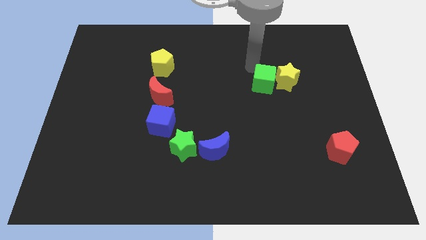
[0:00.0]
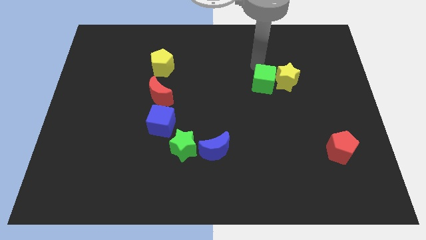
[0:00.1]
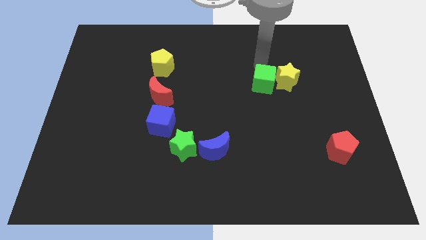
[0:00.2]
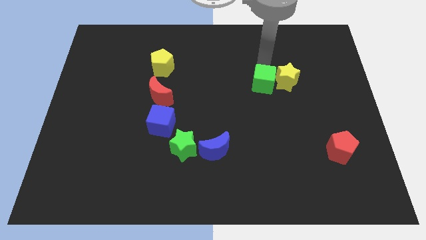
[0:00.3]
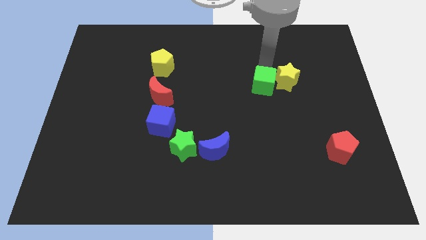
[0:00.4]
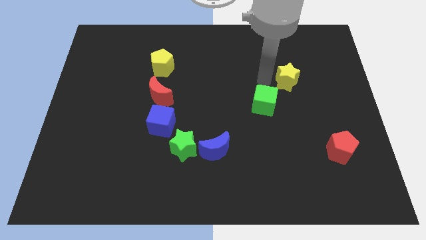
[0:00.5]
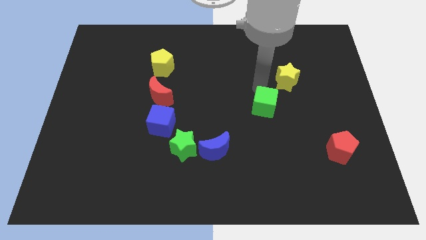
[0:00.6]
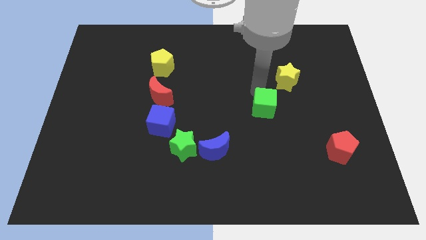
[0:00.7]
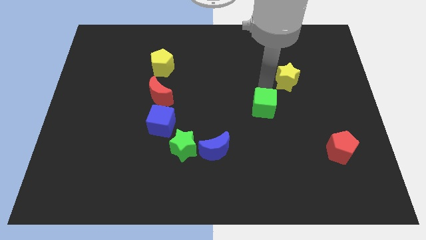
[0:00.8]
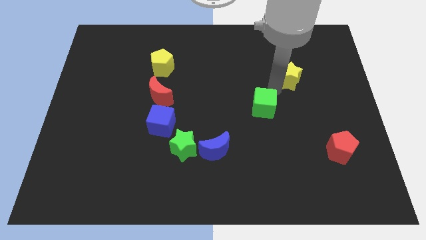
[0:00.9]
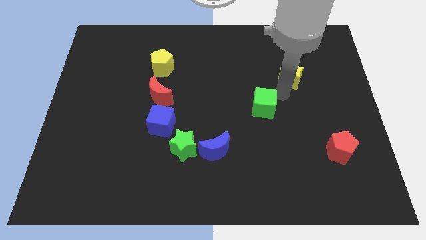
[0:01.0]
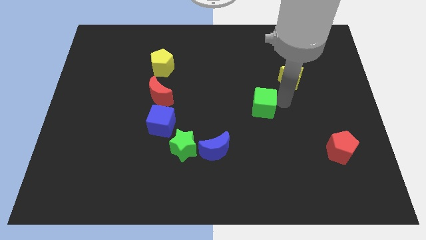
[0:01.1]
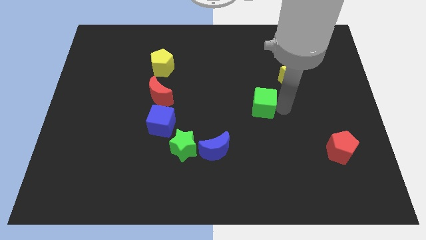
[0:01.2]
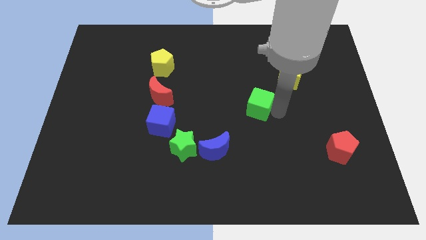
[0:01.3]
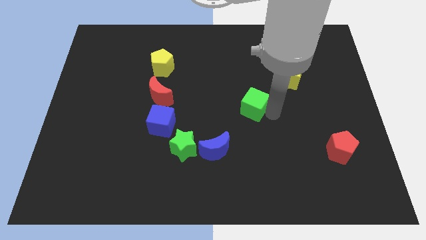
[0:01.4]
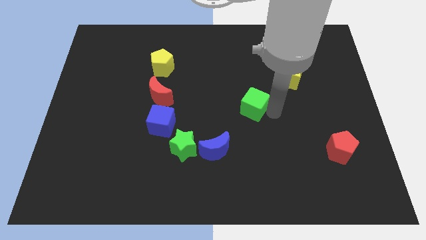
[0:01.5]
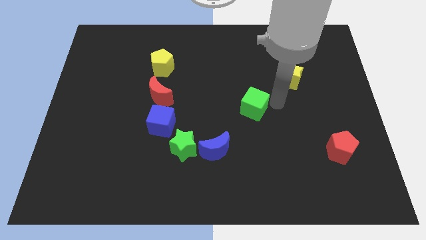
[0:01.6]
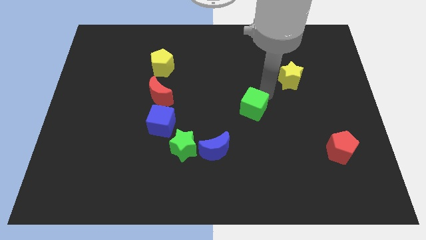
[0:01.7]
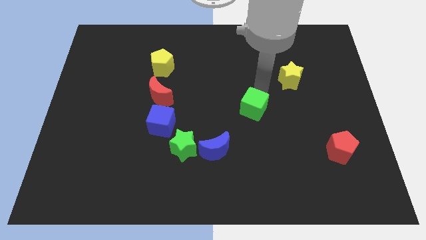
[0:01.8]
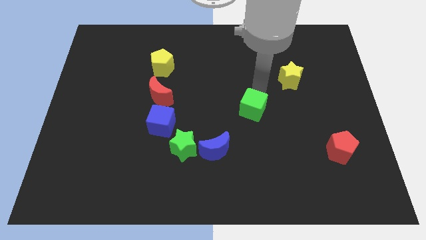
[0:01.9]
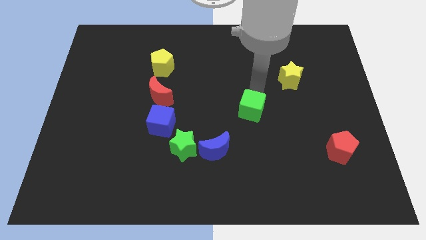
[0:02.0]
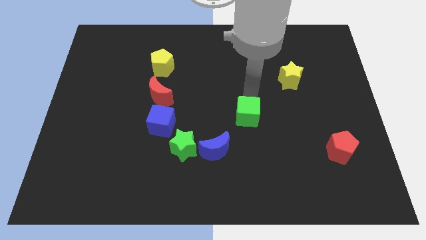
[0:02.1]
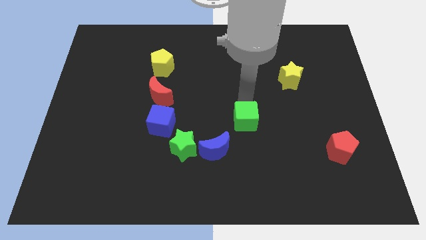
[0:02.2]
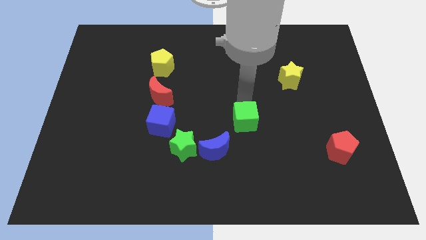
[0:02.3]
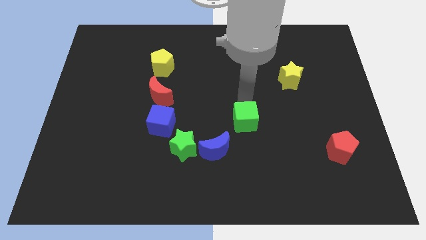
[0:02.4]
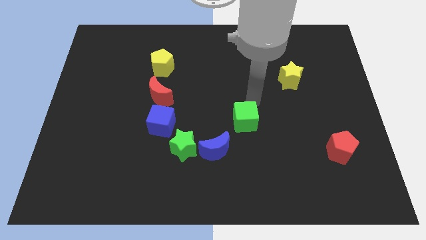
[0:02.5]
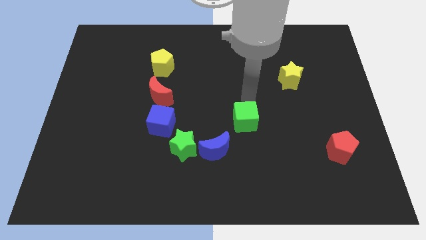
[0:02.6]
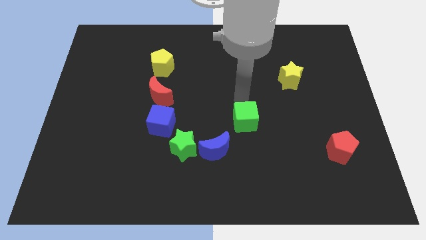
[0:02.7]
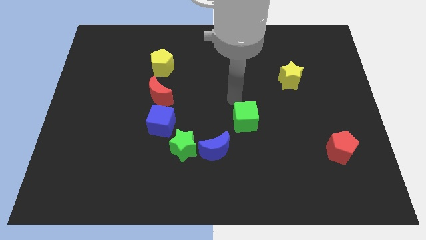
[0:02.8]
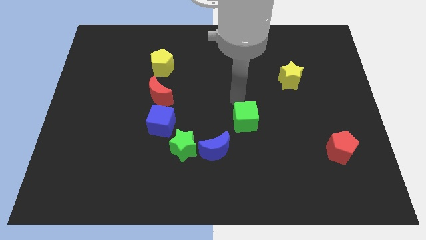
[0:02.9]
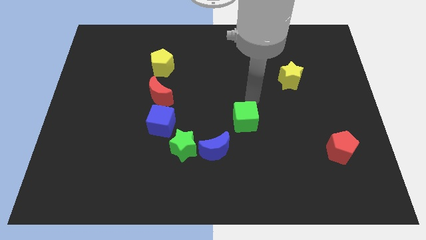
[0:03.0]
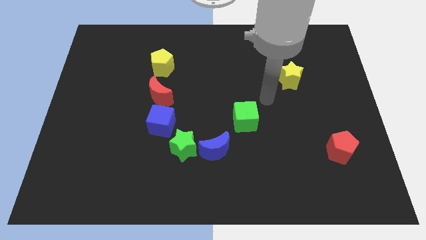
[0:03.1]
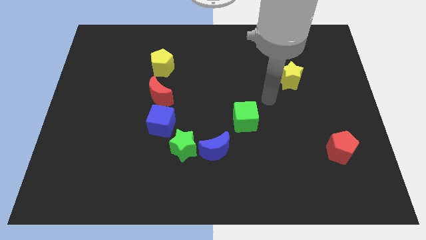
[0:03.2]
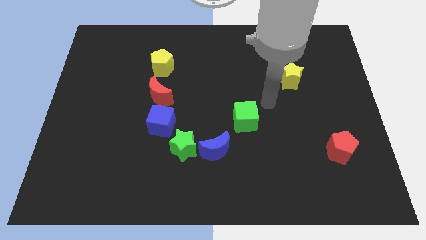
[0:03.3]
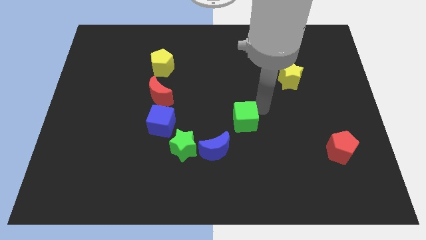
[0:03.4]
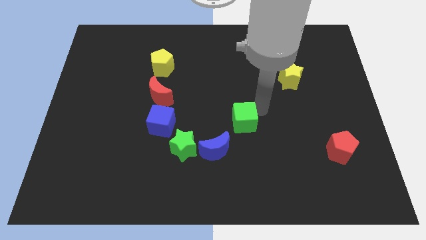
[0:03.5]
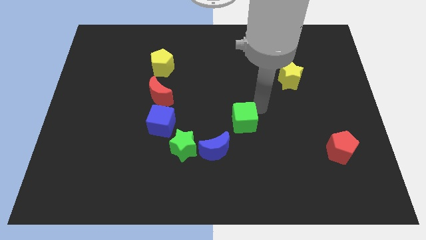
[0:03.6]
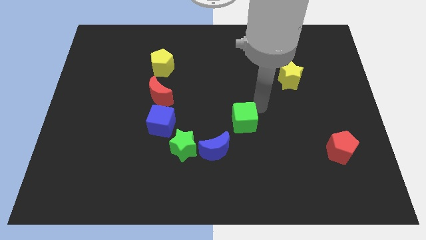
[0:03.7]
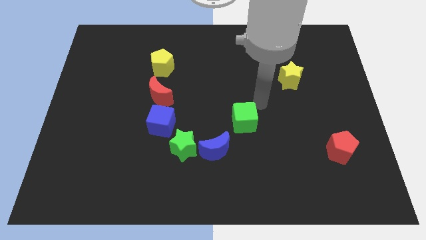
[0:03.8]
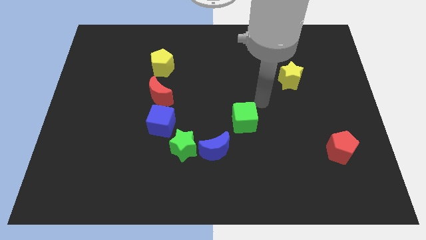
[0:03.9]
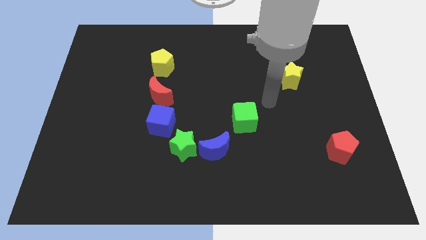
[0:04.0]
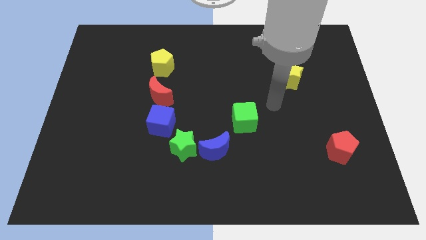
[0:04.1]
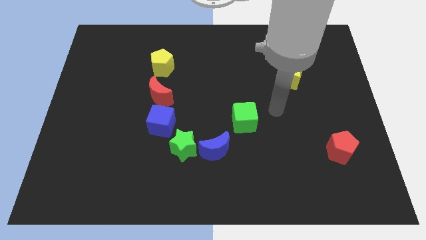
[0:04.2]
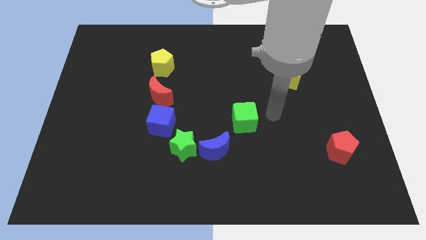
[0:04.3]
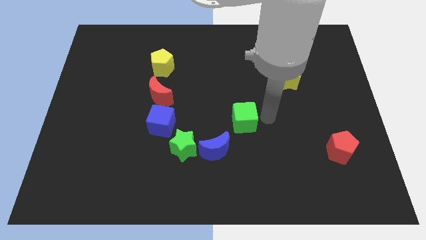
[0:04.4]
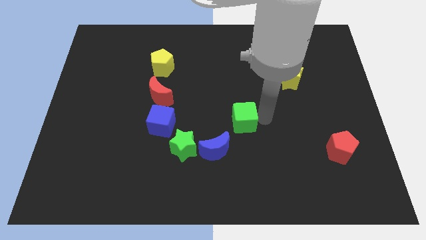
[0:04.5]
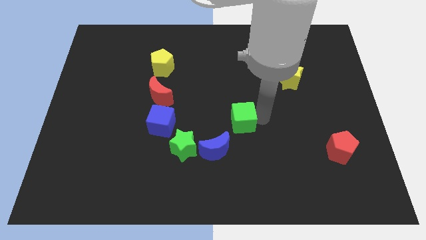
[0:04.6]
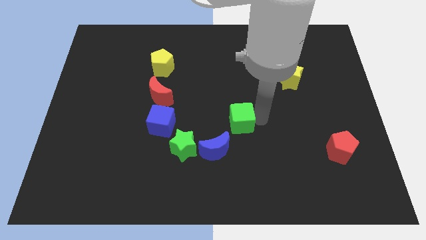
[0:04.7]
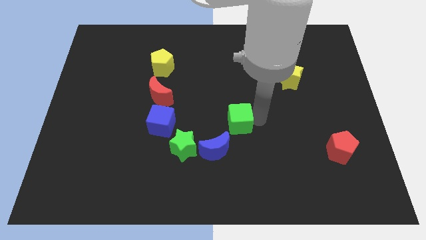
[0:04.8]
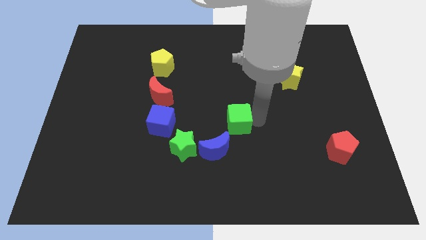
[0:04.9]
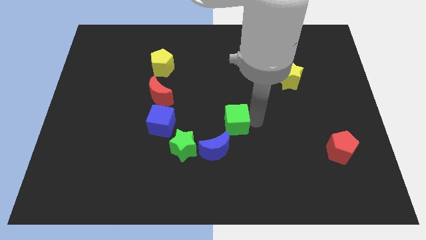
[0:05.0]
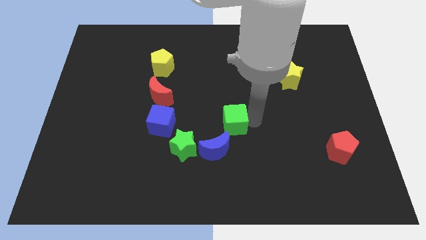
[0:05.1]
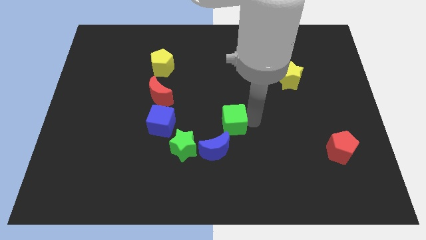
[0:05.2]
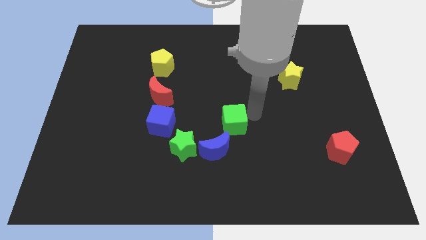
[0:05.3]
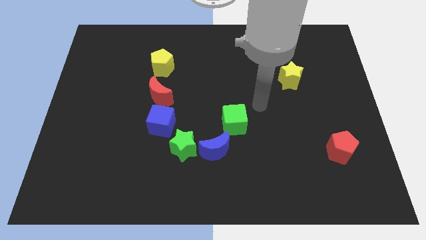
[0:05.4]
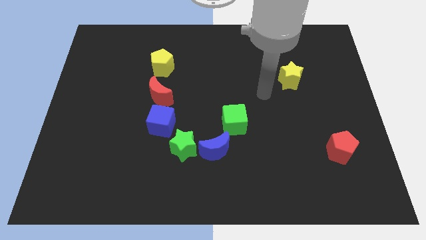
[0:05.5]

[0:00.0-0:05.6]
place the green cube to the top right corner of the board

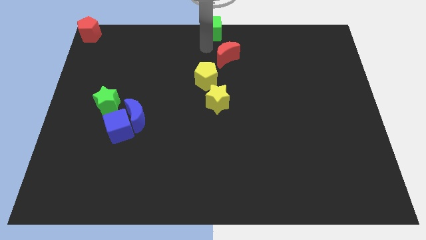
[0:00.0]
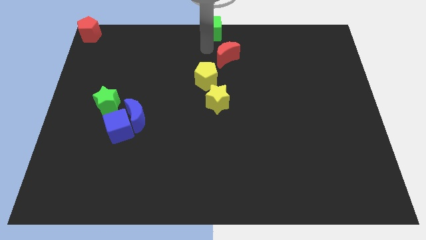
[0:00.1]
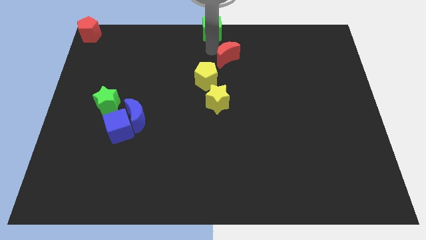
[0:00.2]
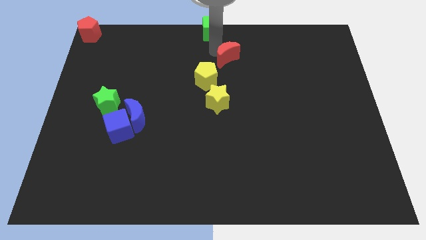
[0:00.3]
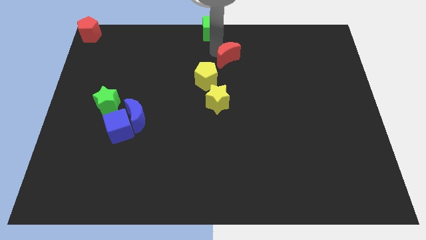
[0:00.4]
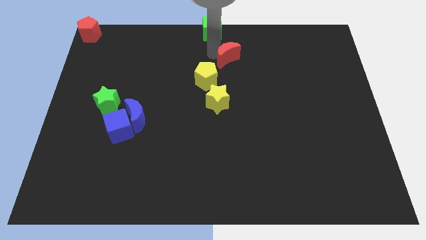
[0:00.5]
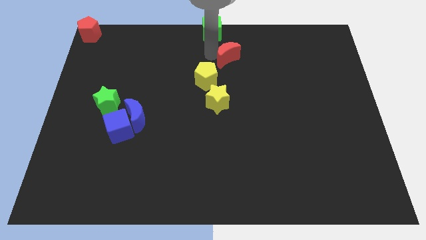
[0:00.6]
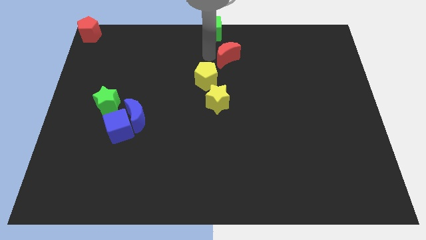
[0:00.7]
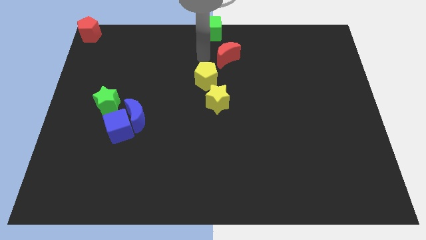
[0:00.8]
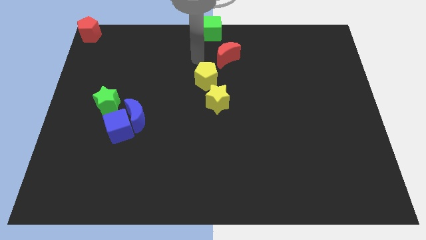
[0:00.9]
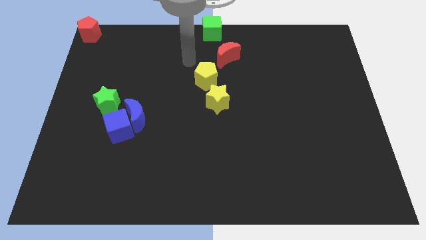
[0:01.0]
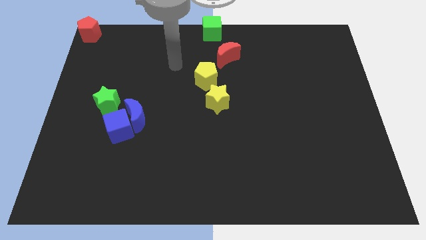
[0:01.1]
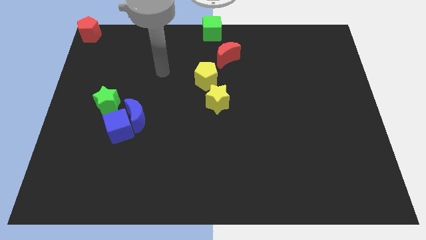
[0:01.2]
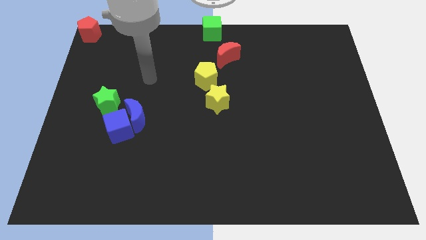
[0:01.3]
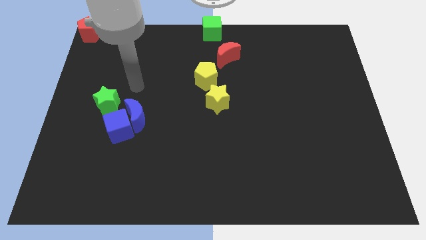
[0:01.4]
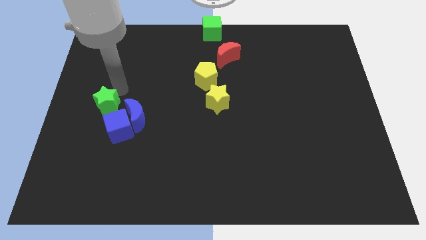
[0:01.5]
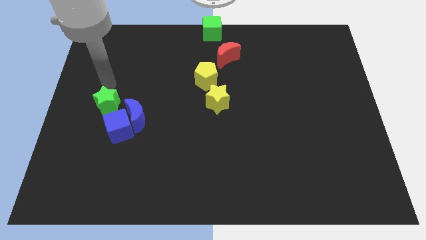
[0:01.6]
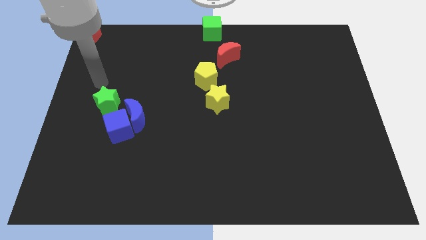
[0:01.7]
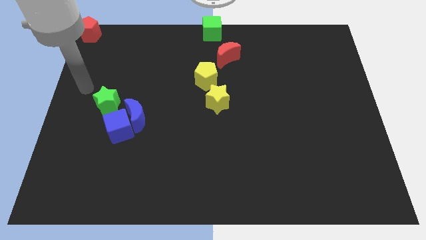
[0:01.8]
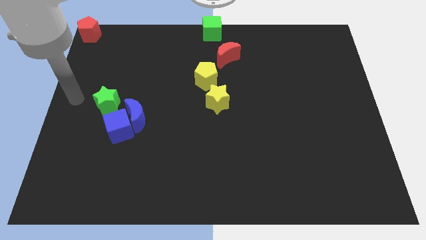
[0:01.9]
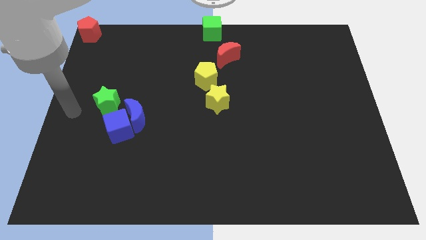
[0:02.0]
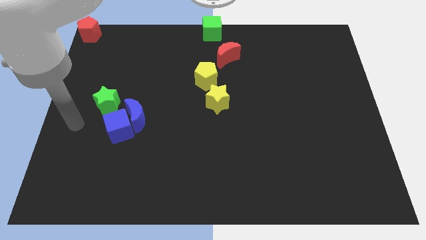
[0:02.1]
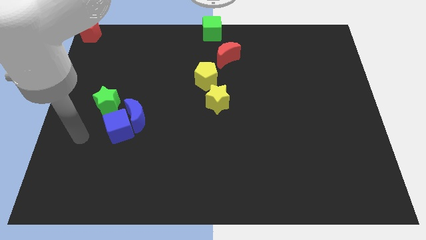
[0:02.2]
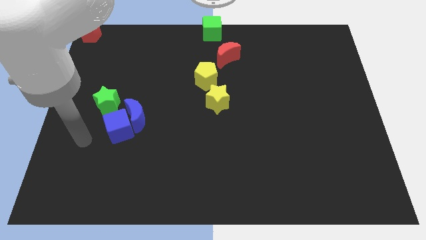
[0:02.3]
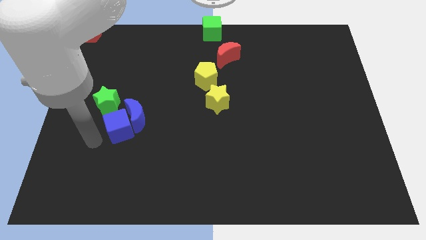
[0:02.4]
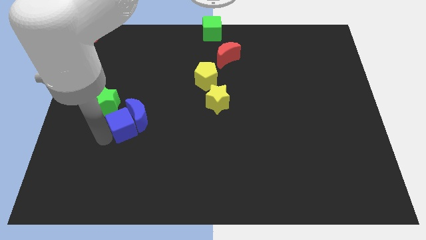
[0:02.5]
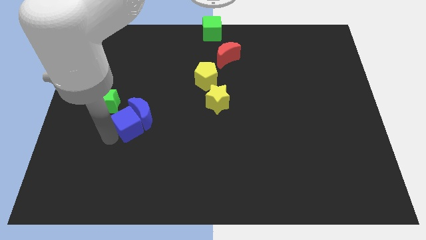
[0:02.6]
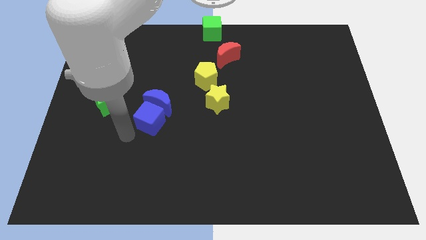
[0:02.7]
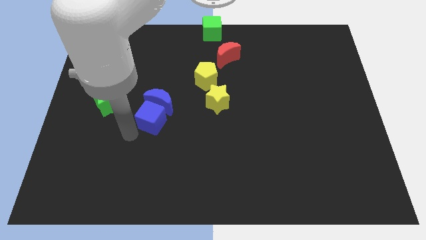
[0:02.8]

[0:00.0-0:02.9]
separate the blue blocks from the green star

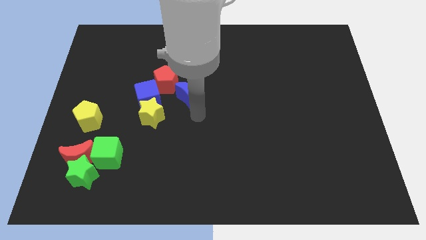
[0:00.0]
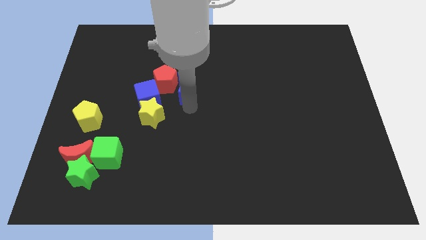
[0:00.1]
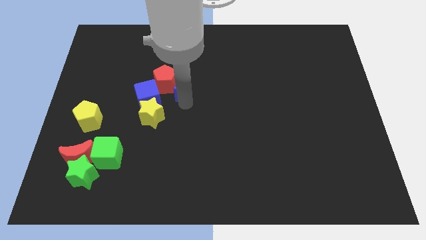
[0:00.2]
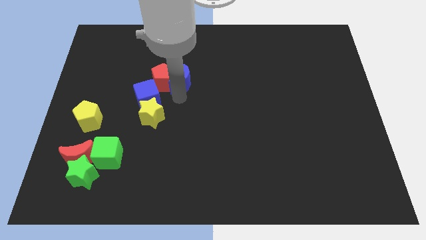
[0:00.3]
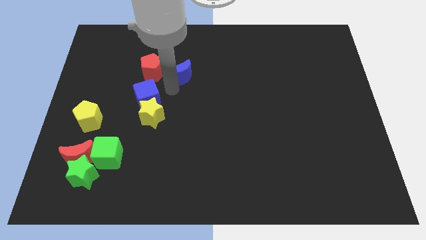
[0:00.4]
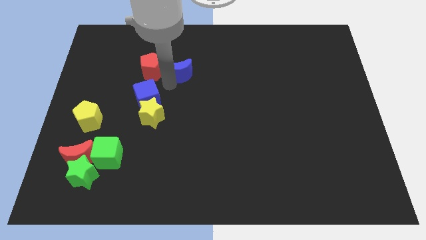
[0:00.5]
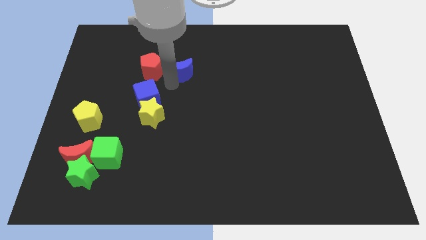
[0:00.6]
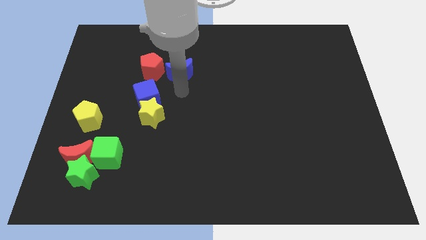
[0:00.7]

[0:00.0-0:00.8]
push the blue crescent slightly to the top of the board
